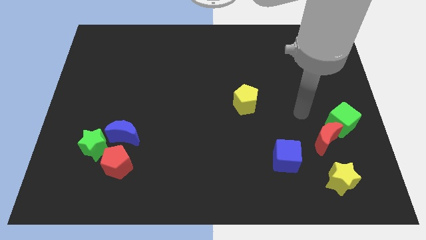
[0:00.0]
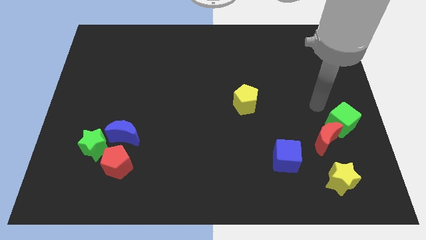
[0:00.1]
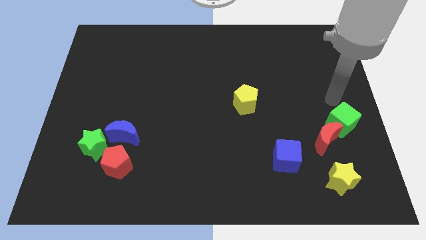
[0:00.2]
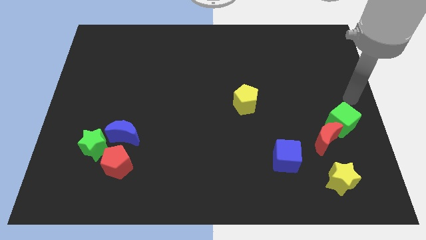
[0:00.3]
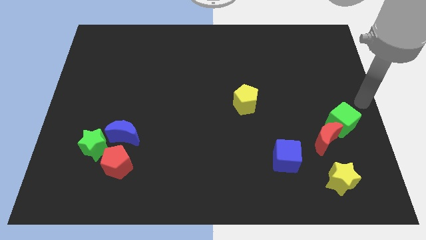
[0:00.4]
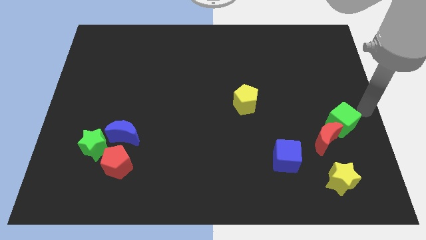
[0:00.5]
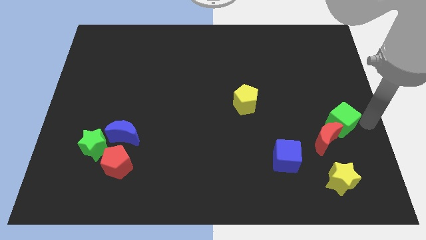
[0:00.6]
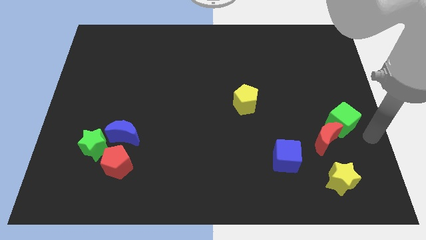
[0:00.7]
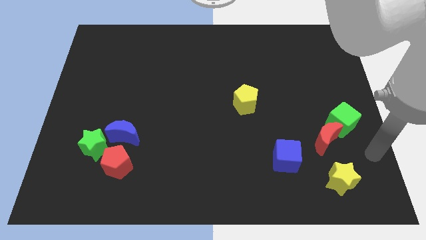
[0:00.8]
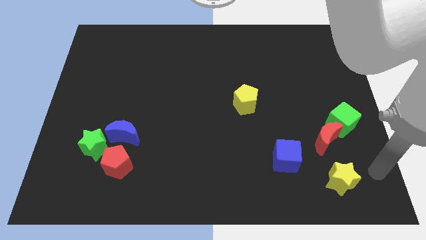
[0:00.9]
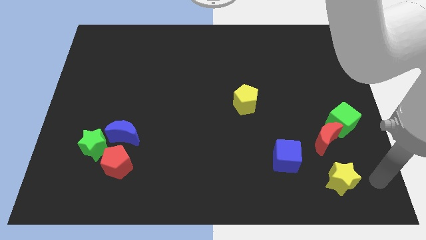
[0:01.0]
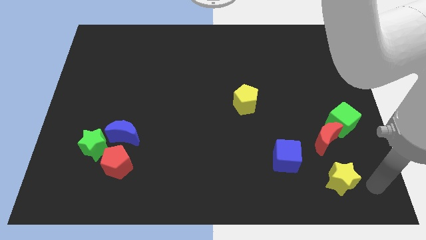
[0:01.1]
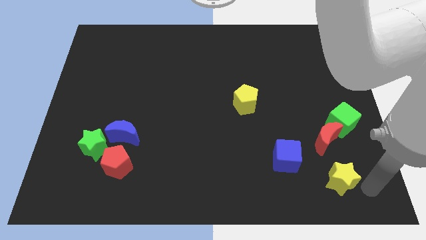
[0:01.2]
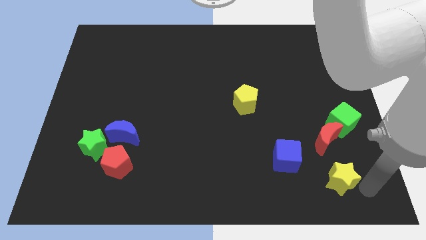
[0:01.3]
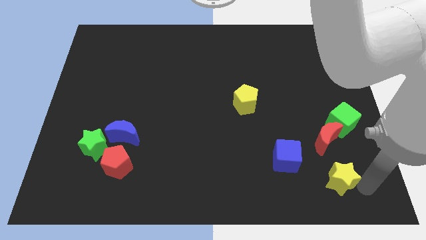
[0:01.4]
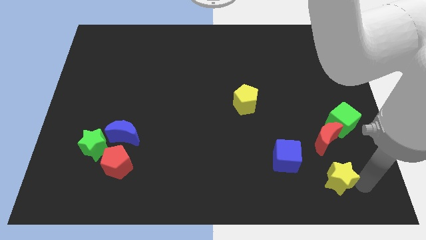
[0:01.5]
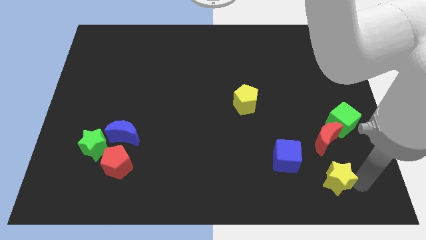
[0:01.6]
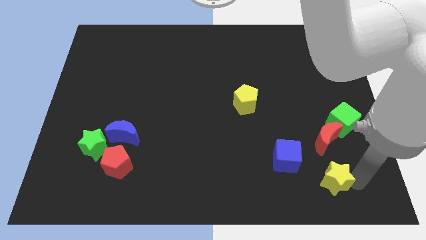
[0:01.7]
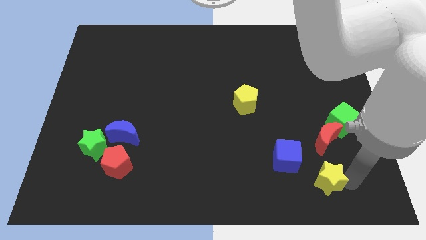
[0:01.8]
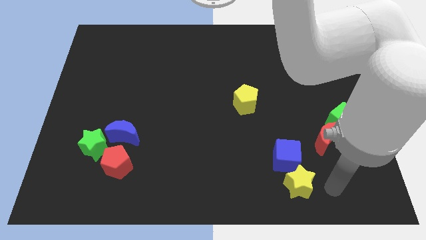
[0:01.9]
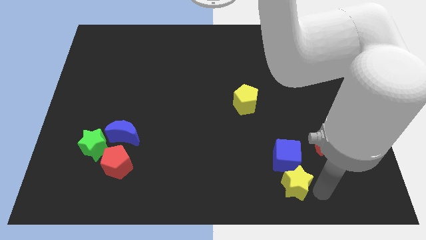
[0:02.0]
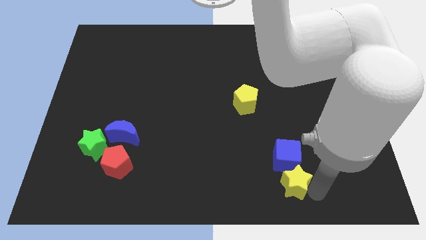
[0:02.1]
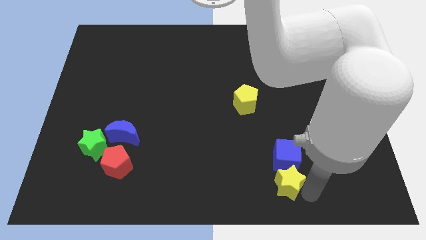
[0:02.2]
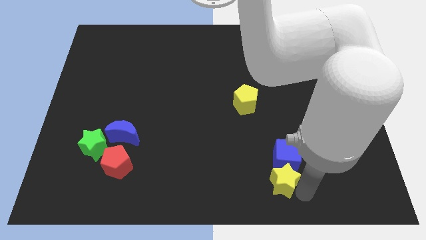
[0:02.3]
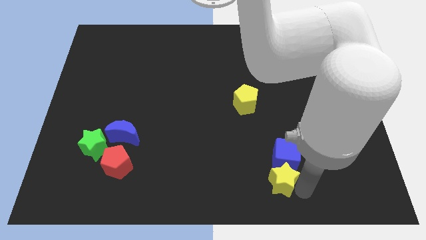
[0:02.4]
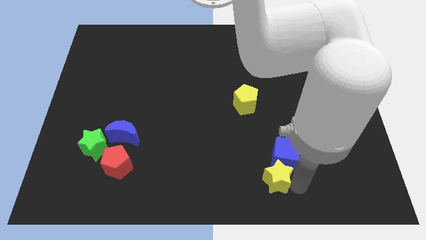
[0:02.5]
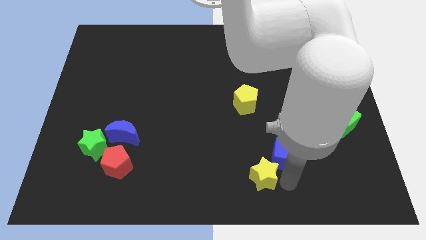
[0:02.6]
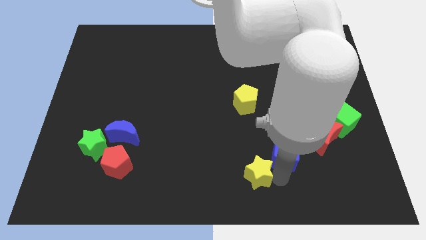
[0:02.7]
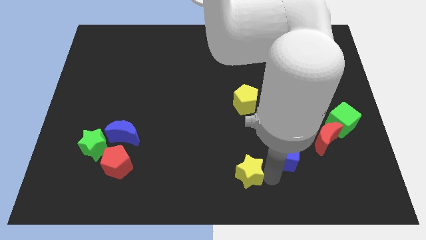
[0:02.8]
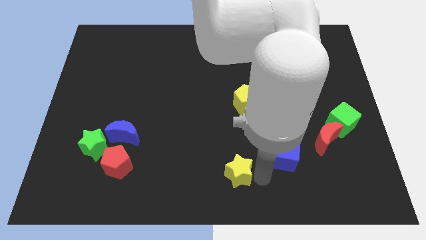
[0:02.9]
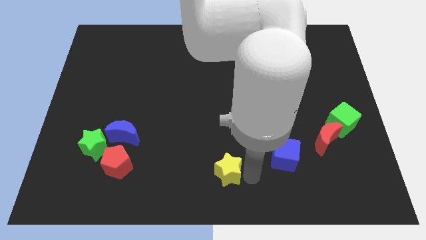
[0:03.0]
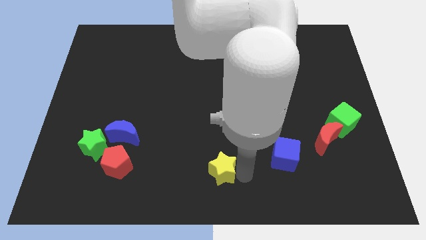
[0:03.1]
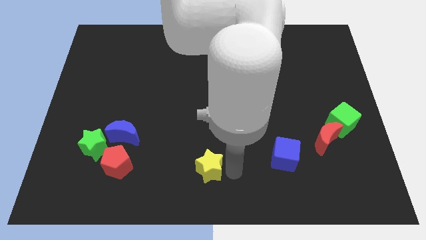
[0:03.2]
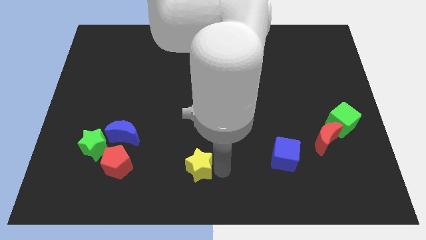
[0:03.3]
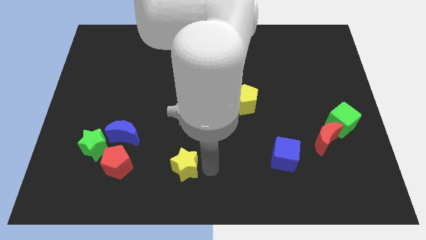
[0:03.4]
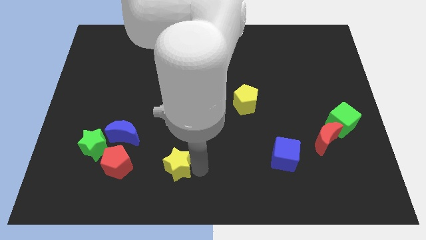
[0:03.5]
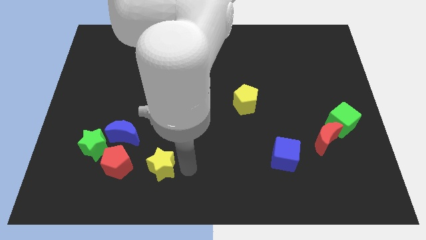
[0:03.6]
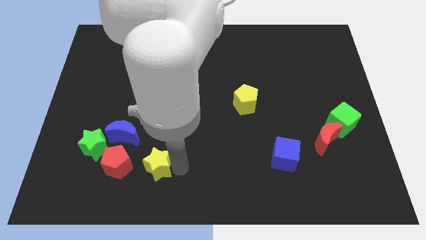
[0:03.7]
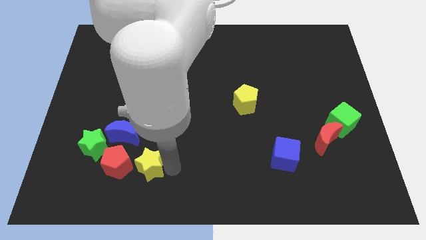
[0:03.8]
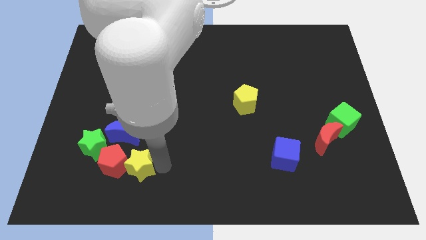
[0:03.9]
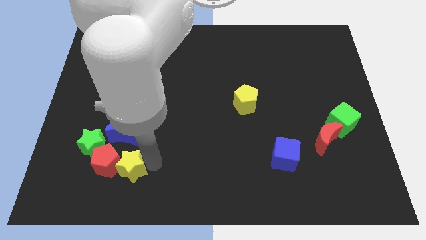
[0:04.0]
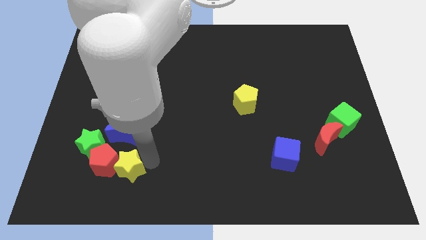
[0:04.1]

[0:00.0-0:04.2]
slide the yellow star to the red pentagon

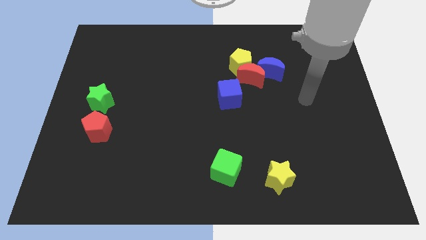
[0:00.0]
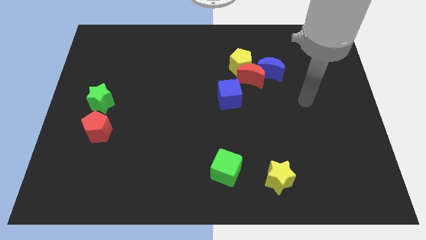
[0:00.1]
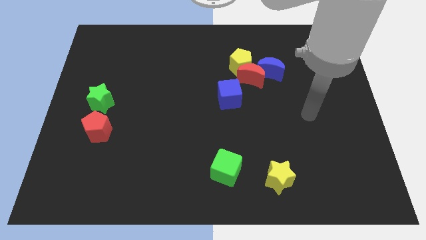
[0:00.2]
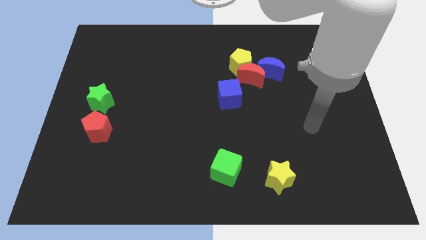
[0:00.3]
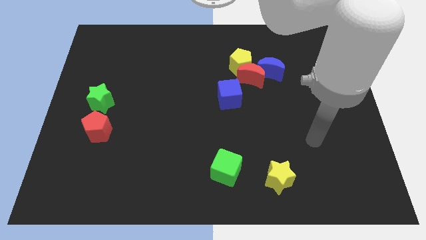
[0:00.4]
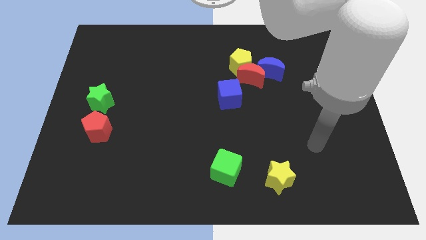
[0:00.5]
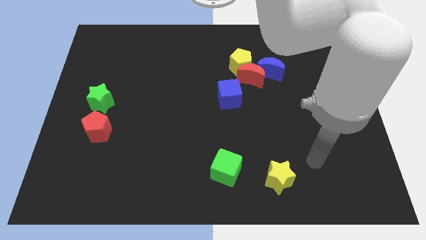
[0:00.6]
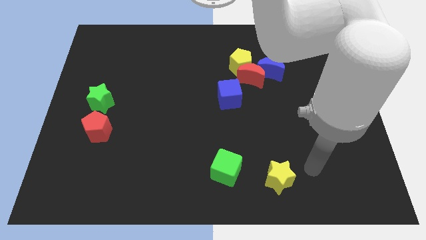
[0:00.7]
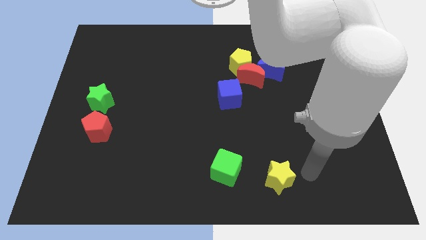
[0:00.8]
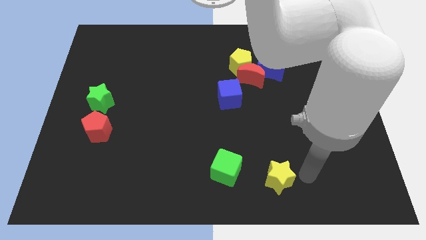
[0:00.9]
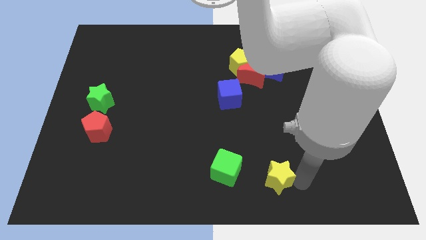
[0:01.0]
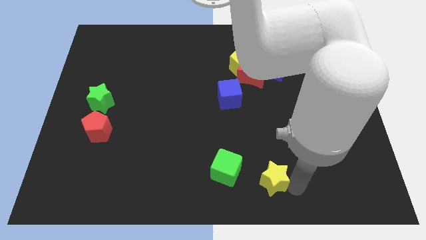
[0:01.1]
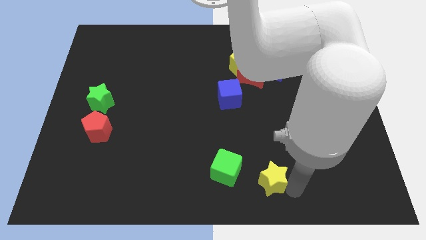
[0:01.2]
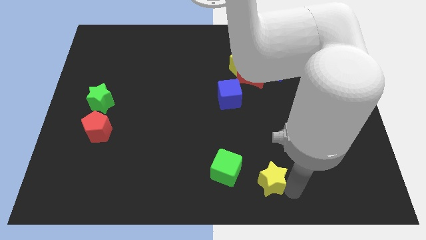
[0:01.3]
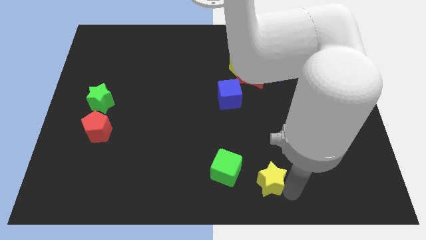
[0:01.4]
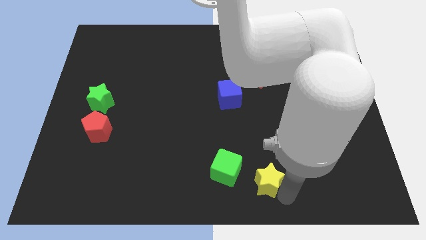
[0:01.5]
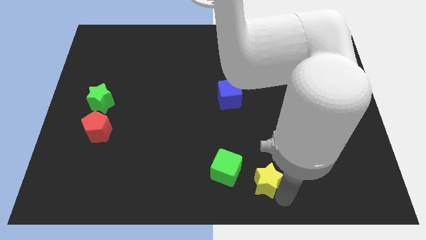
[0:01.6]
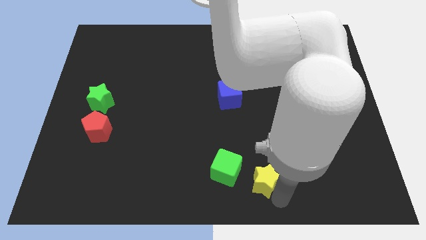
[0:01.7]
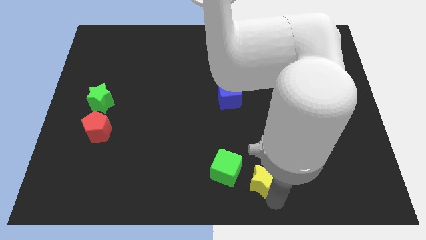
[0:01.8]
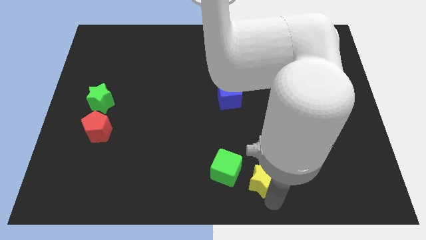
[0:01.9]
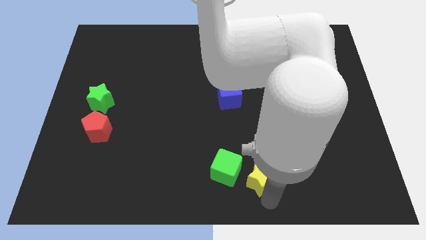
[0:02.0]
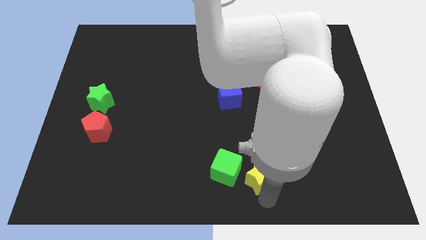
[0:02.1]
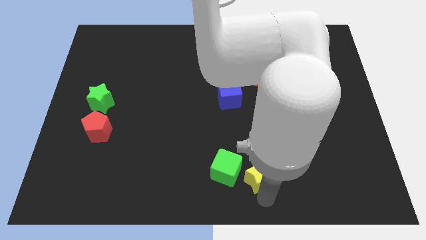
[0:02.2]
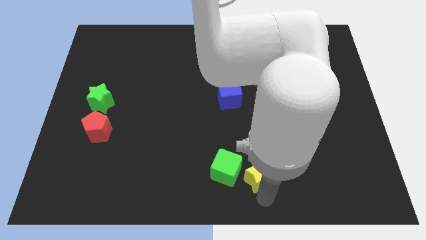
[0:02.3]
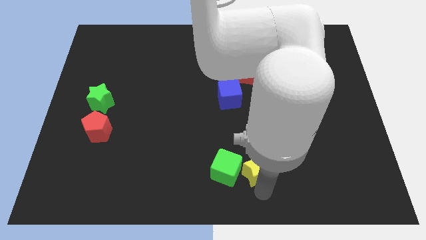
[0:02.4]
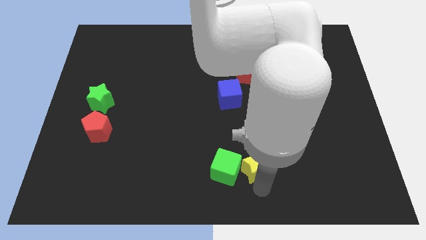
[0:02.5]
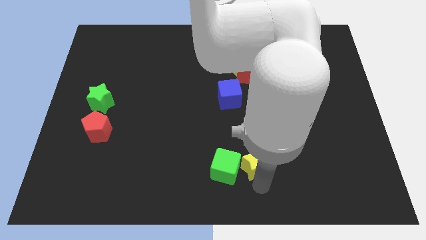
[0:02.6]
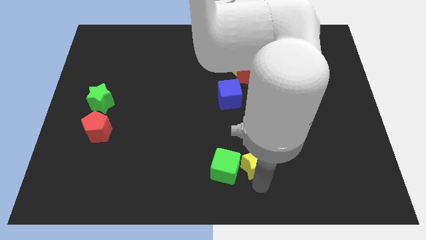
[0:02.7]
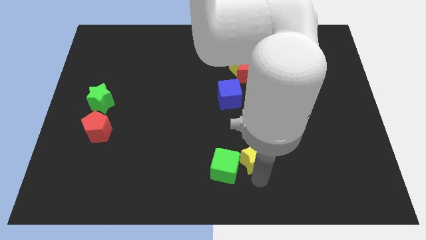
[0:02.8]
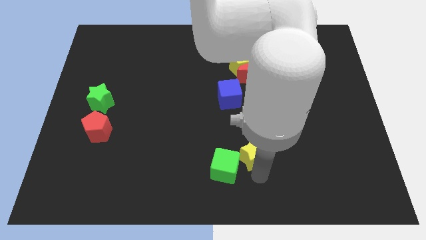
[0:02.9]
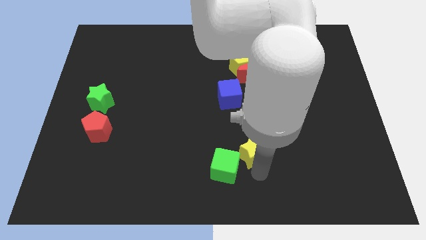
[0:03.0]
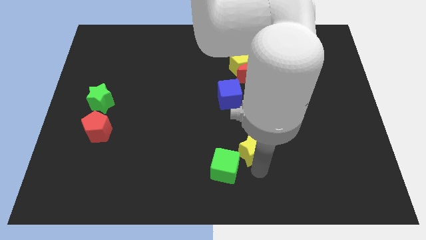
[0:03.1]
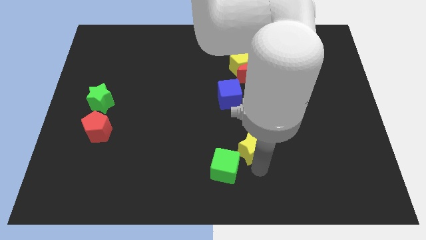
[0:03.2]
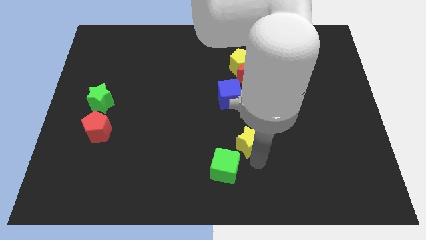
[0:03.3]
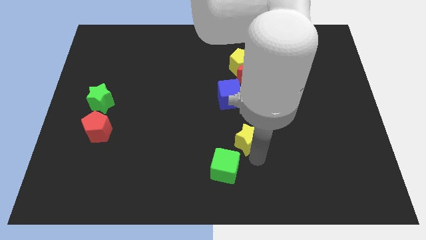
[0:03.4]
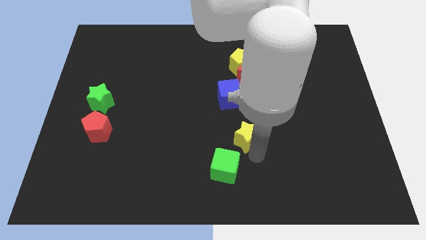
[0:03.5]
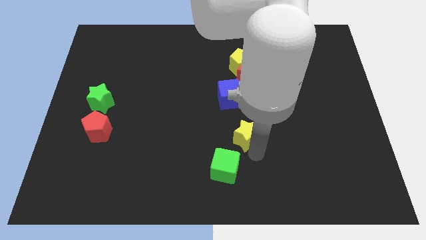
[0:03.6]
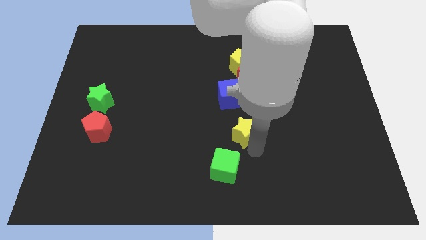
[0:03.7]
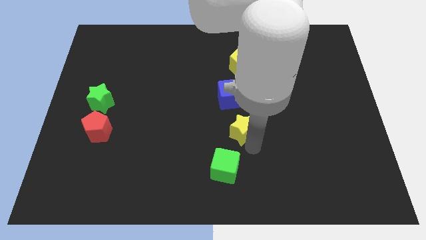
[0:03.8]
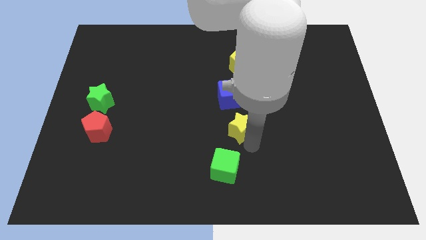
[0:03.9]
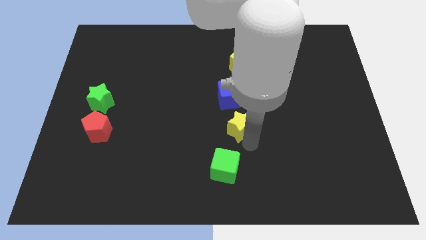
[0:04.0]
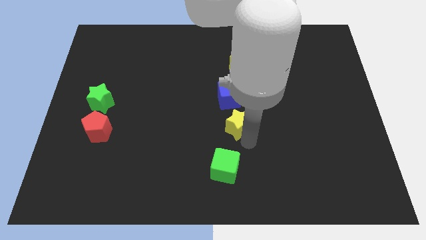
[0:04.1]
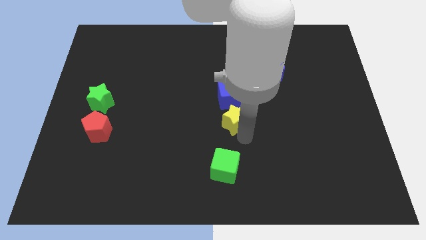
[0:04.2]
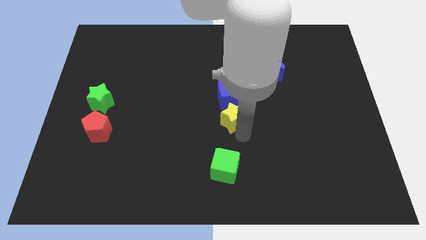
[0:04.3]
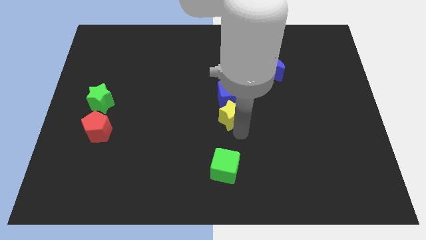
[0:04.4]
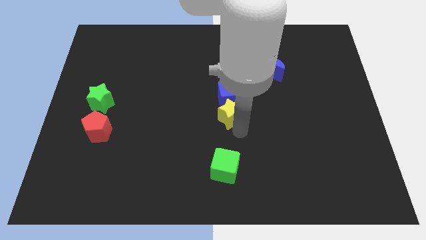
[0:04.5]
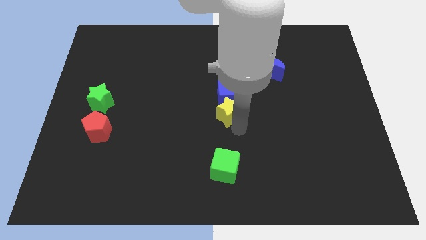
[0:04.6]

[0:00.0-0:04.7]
push the yellow star next to the blue cube

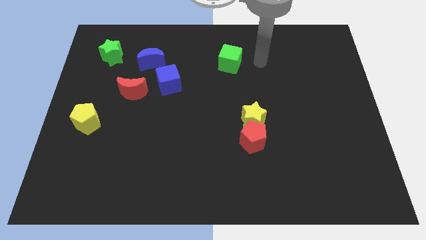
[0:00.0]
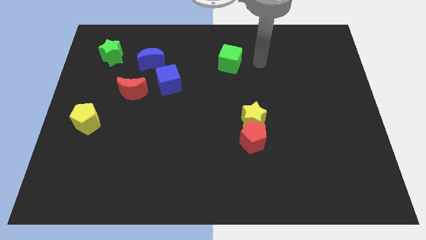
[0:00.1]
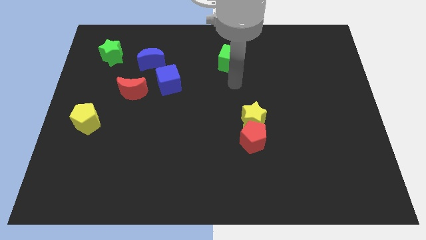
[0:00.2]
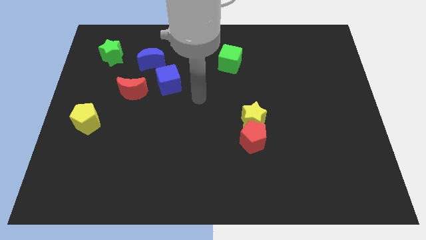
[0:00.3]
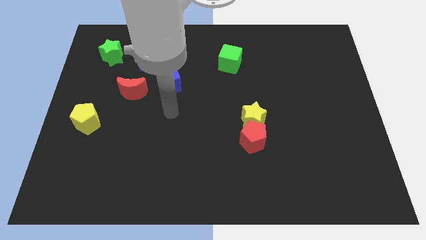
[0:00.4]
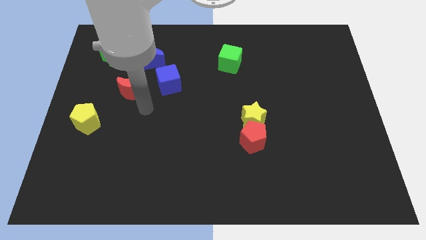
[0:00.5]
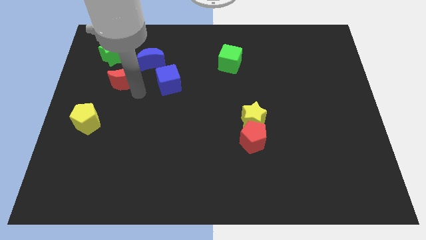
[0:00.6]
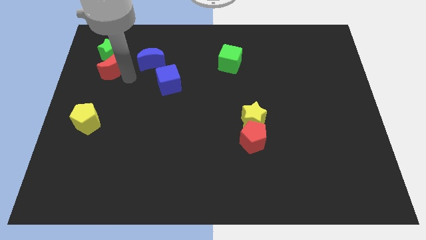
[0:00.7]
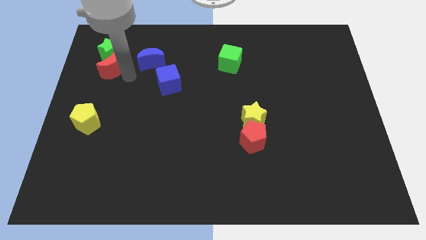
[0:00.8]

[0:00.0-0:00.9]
put the red moon to the green star
